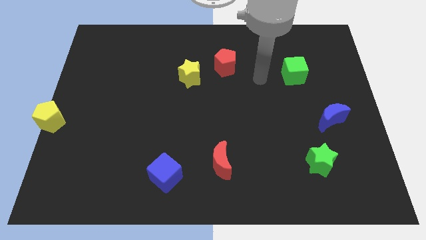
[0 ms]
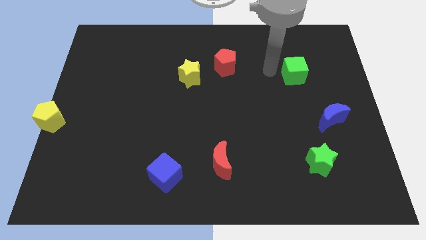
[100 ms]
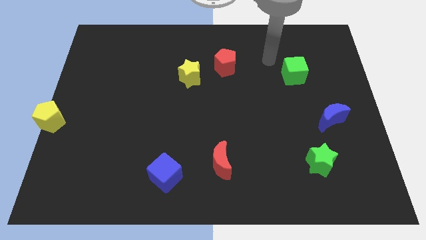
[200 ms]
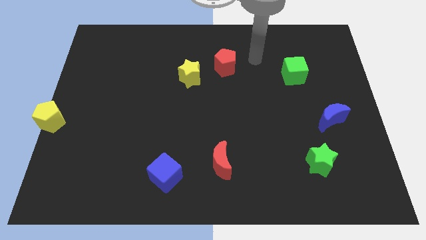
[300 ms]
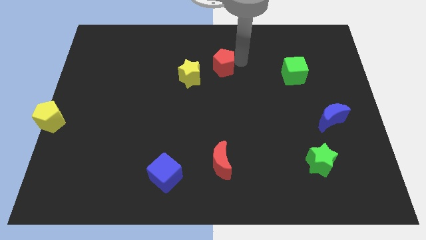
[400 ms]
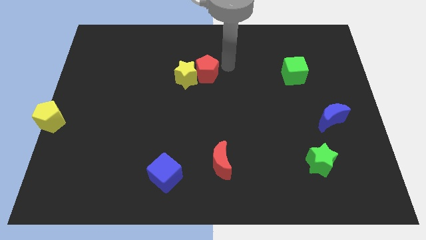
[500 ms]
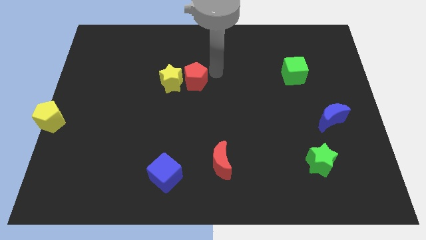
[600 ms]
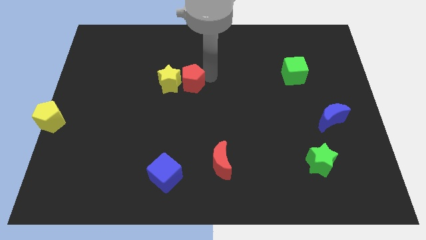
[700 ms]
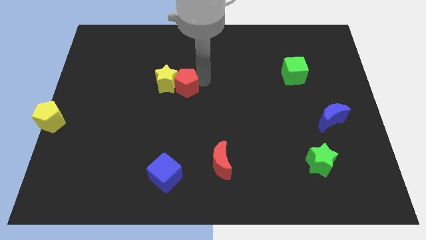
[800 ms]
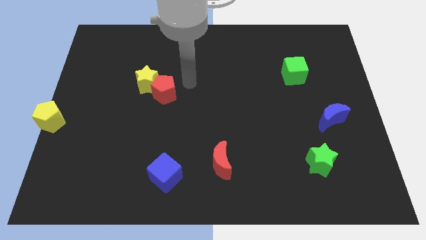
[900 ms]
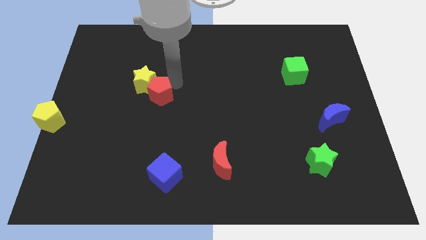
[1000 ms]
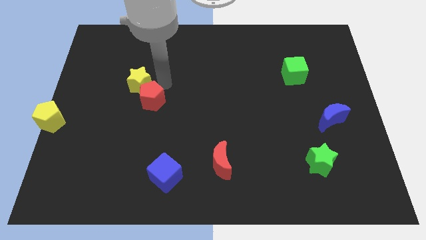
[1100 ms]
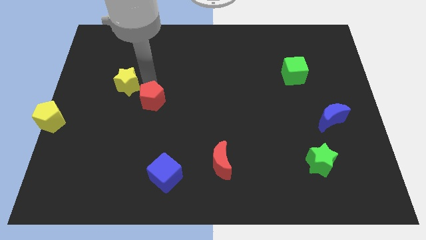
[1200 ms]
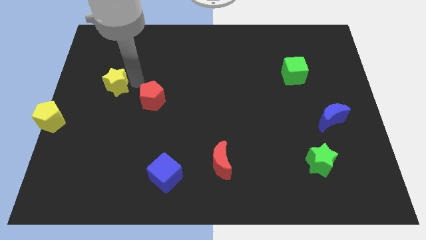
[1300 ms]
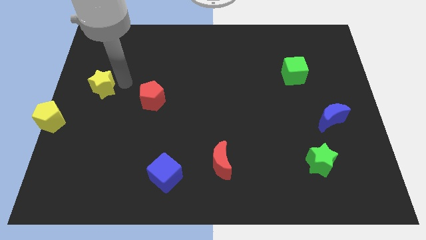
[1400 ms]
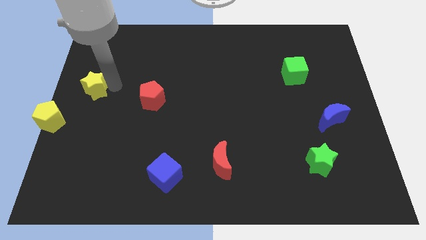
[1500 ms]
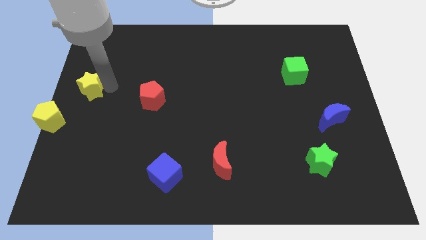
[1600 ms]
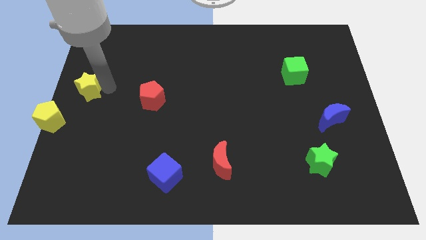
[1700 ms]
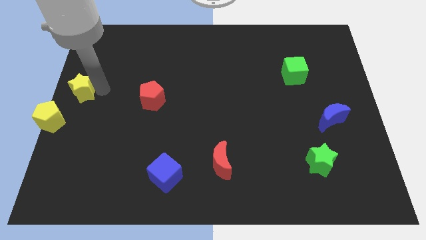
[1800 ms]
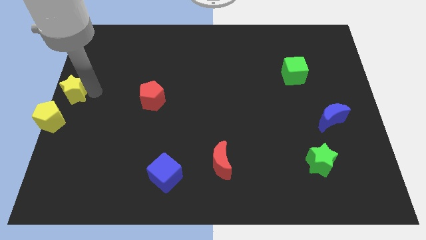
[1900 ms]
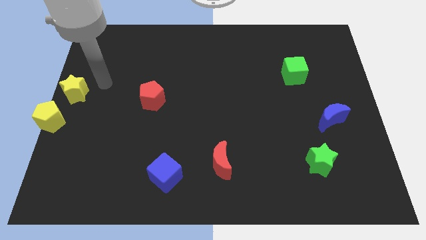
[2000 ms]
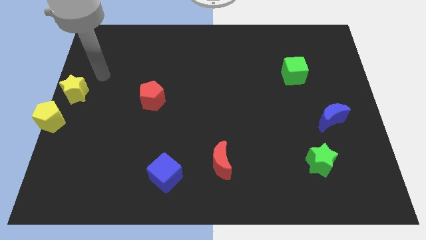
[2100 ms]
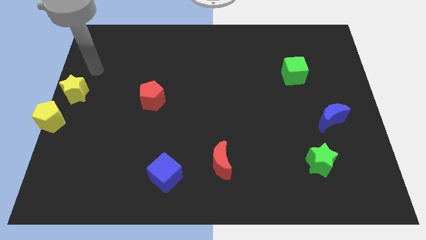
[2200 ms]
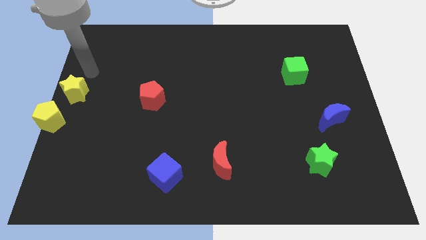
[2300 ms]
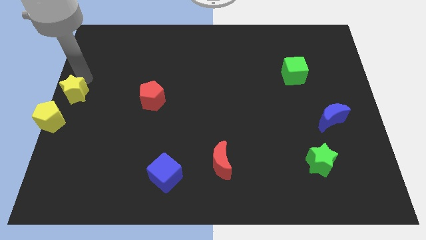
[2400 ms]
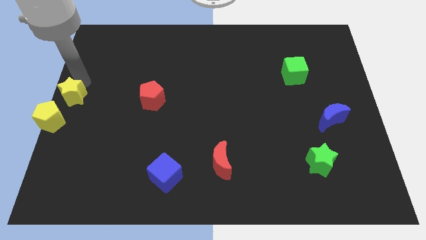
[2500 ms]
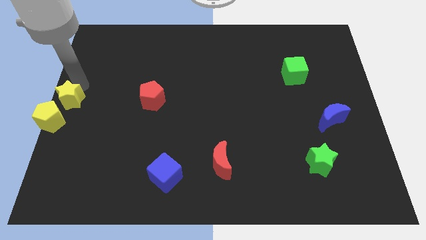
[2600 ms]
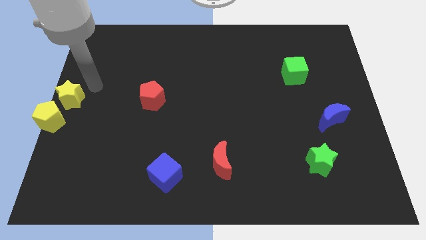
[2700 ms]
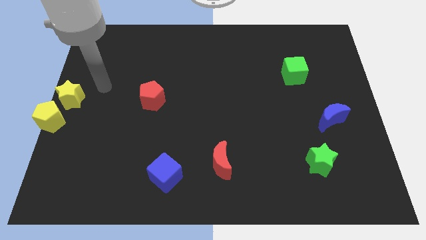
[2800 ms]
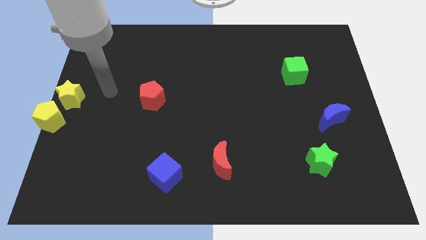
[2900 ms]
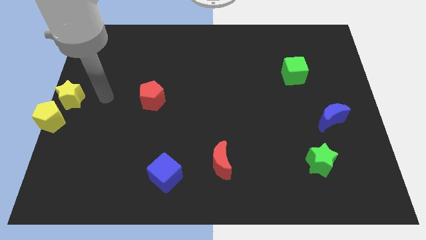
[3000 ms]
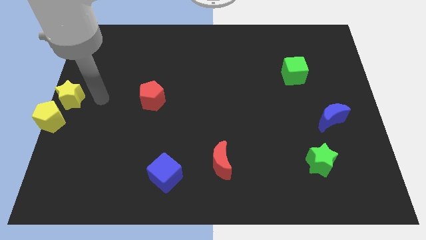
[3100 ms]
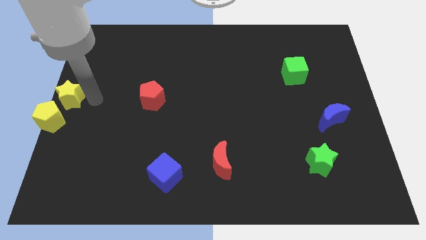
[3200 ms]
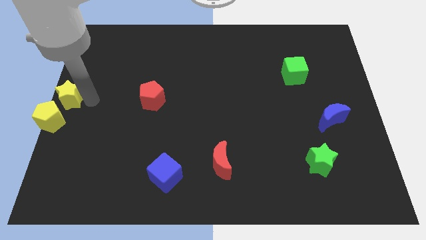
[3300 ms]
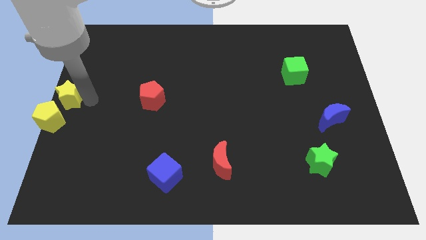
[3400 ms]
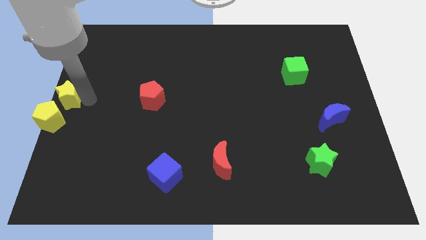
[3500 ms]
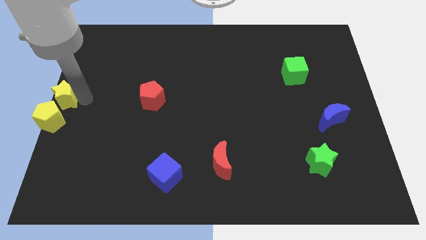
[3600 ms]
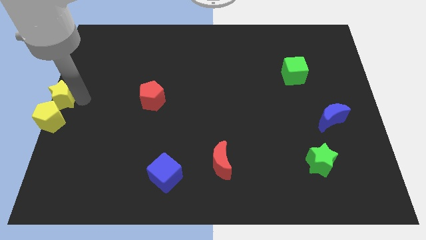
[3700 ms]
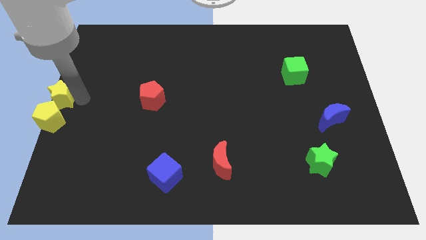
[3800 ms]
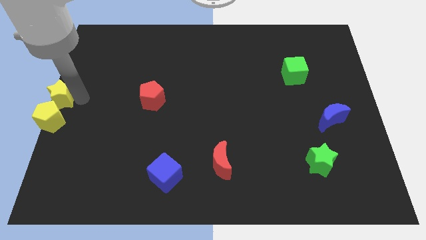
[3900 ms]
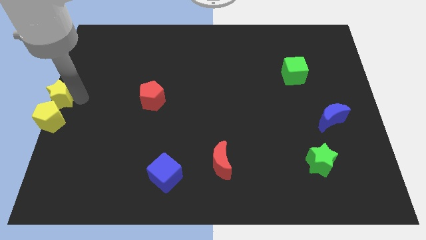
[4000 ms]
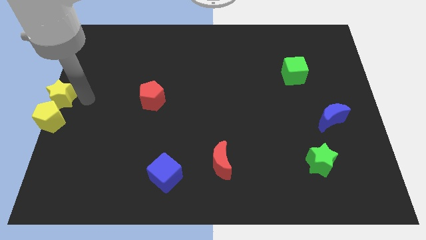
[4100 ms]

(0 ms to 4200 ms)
move the yellow star at the top of the yellow pentagon

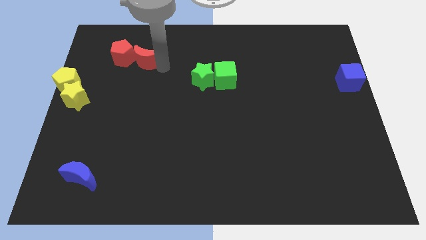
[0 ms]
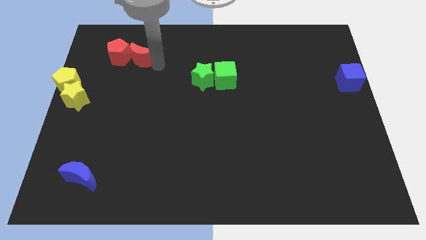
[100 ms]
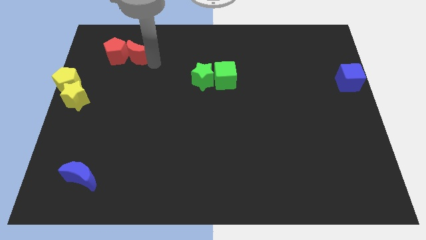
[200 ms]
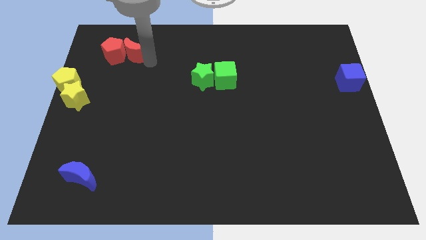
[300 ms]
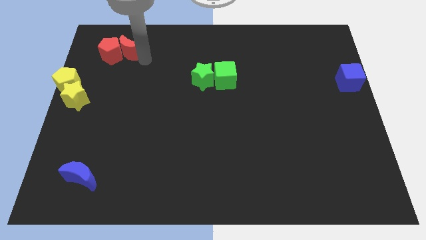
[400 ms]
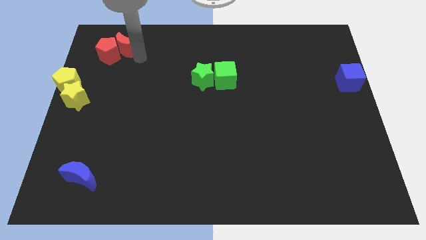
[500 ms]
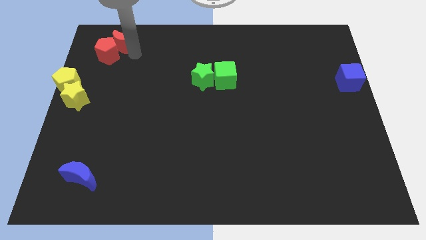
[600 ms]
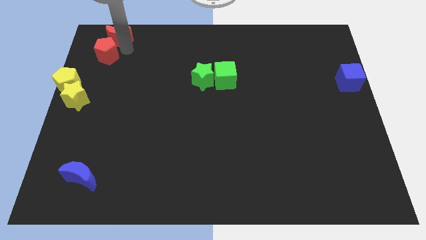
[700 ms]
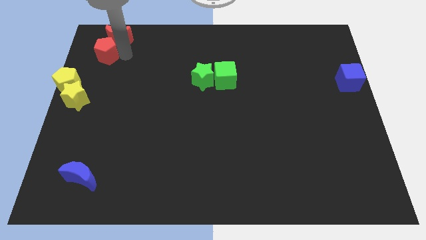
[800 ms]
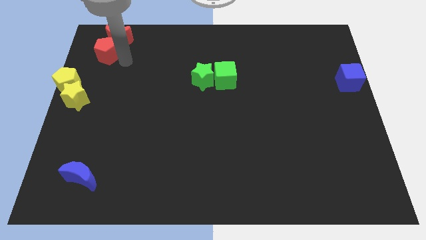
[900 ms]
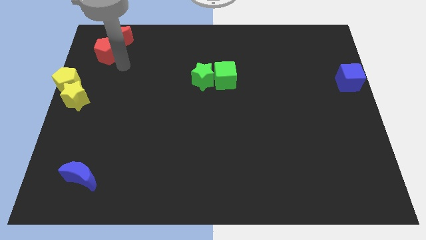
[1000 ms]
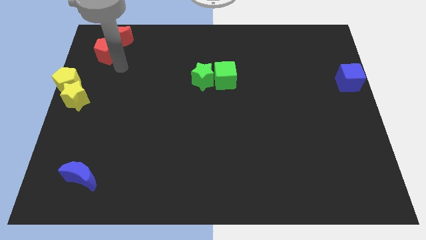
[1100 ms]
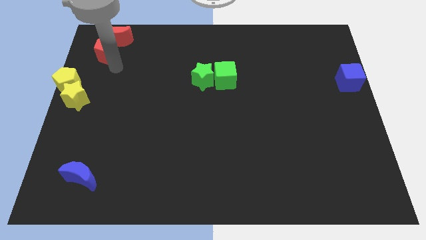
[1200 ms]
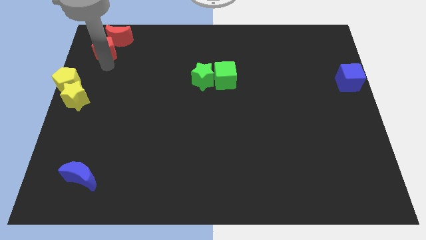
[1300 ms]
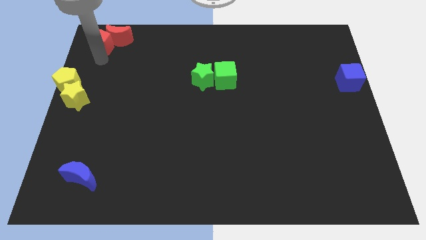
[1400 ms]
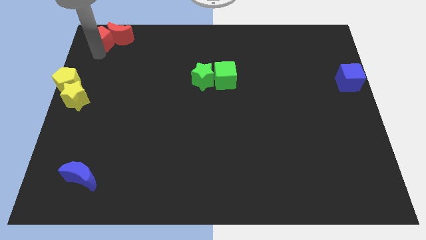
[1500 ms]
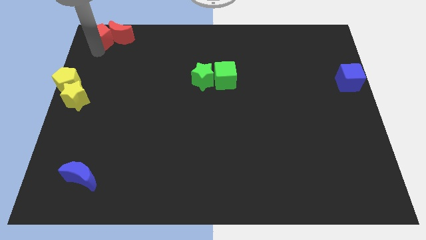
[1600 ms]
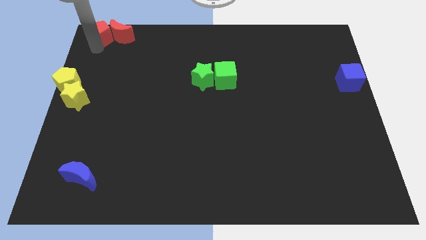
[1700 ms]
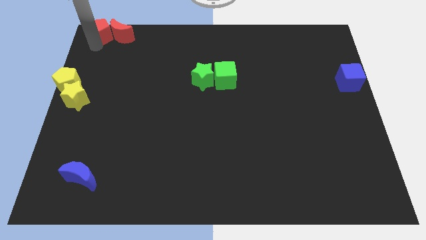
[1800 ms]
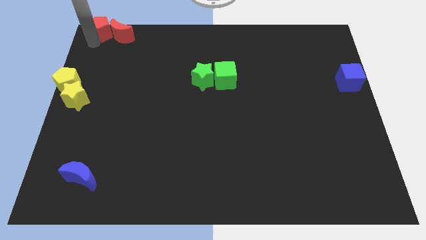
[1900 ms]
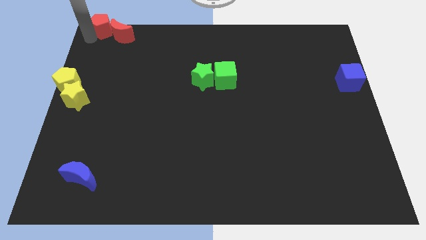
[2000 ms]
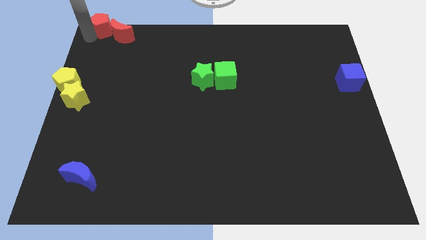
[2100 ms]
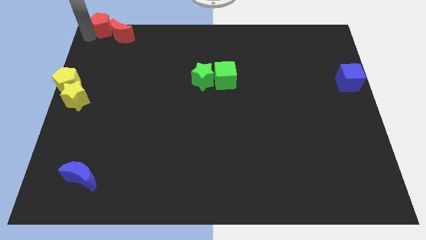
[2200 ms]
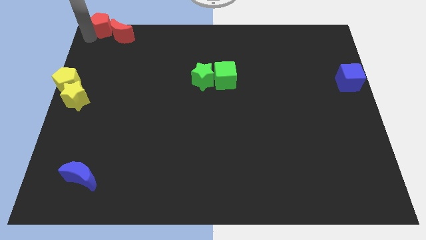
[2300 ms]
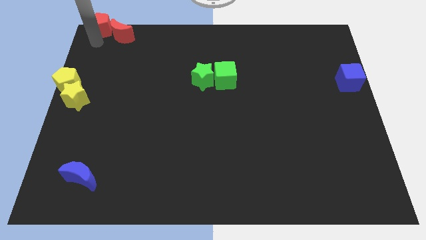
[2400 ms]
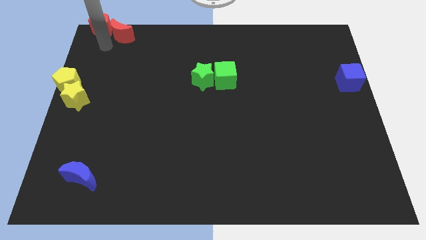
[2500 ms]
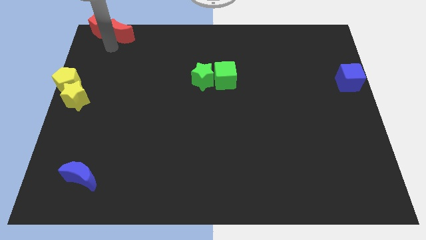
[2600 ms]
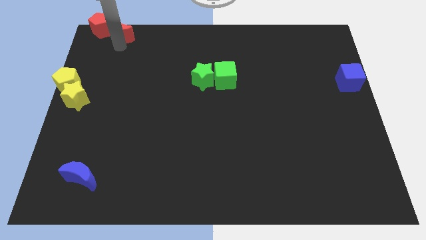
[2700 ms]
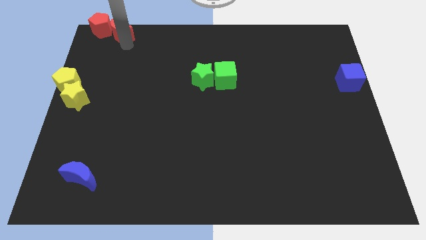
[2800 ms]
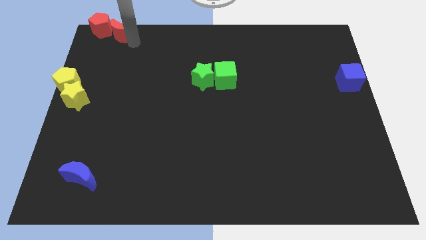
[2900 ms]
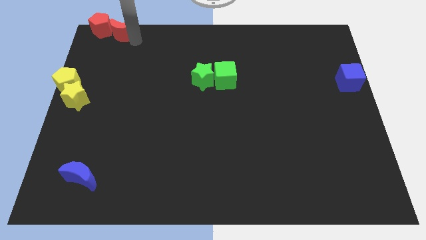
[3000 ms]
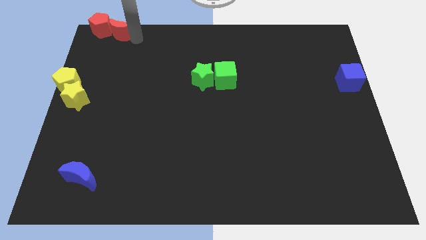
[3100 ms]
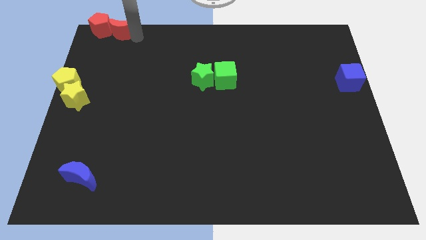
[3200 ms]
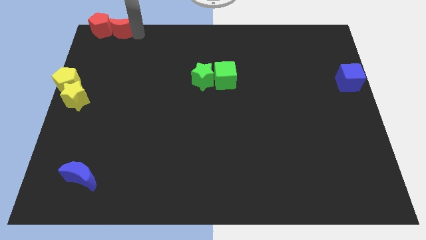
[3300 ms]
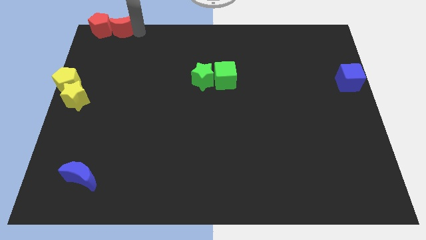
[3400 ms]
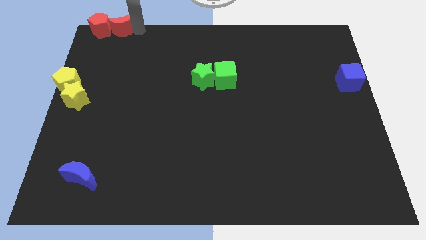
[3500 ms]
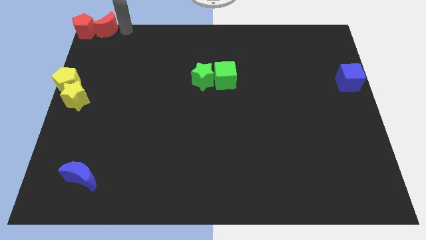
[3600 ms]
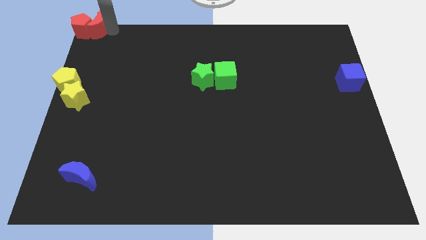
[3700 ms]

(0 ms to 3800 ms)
push the red pentagon red crescent towards the top left of the board

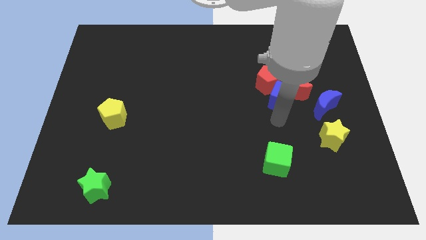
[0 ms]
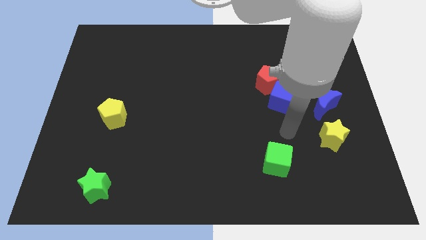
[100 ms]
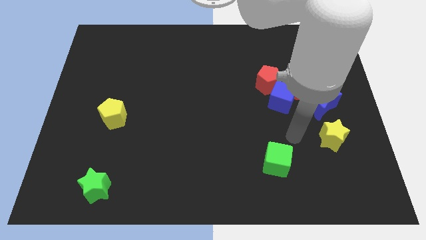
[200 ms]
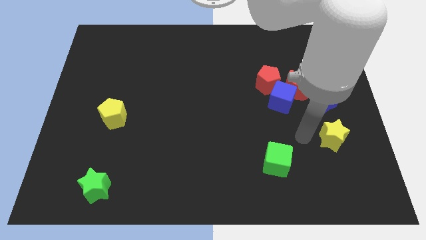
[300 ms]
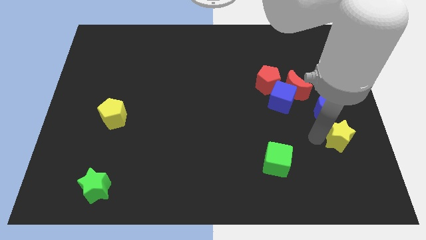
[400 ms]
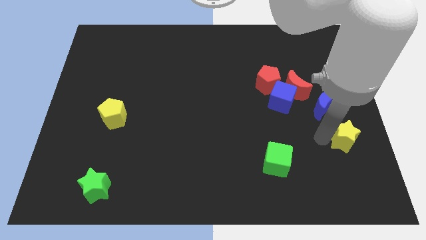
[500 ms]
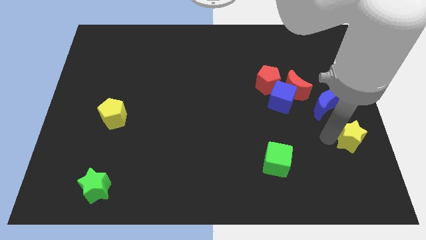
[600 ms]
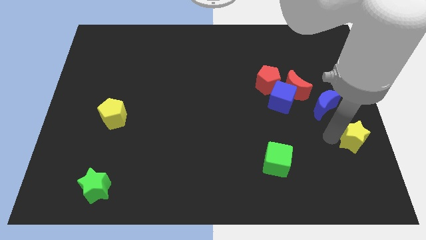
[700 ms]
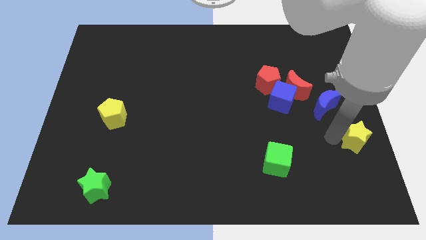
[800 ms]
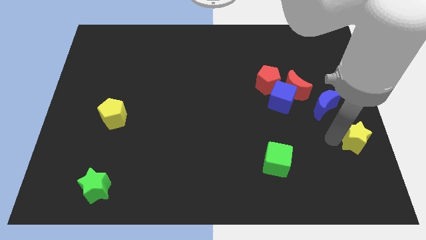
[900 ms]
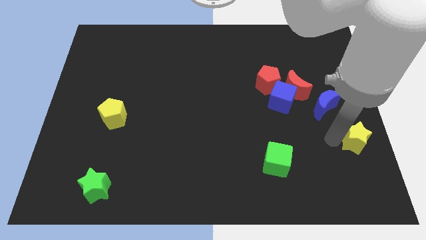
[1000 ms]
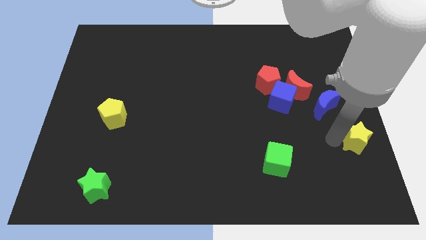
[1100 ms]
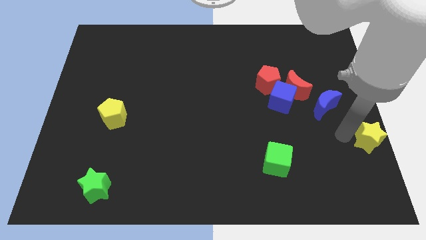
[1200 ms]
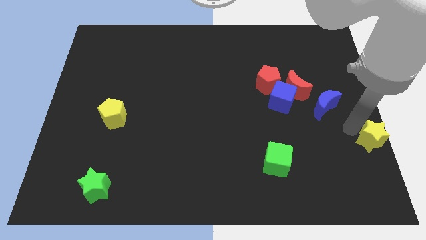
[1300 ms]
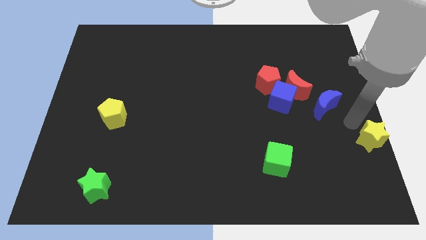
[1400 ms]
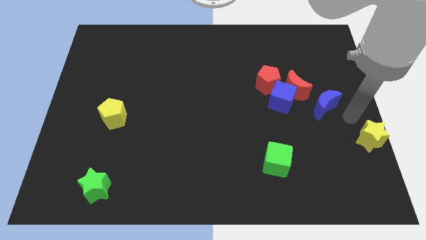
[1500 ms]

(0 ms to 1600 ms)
slide the yellow star to the right end side of the board
